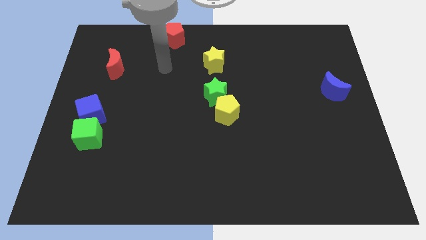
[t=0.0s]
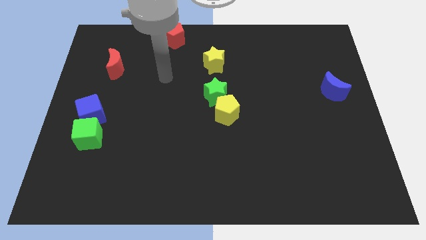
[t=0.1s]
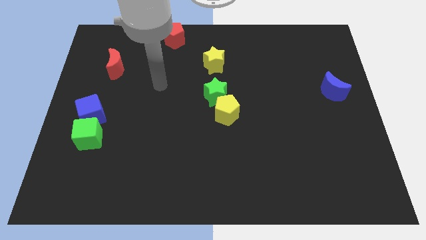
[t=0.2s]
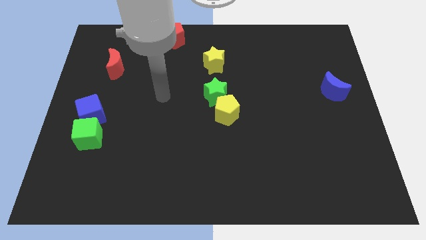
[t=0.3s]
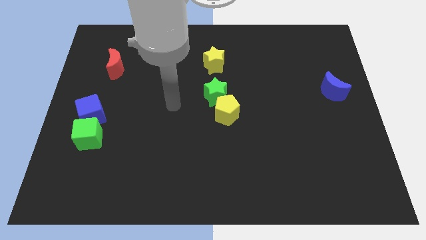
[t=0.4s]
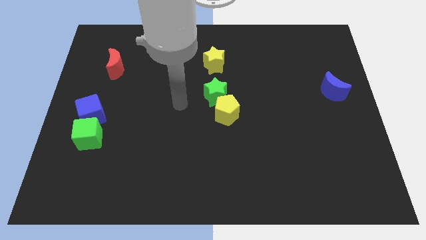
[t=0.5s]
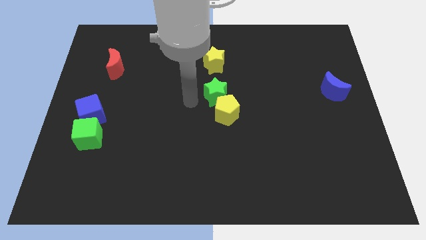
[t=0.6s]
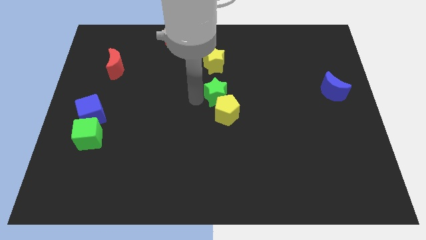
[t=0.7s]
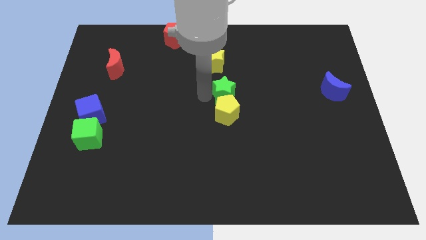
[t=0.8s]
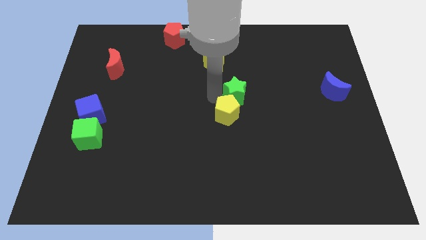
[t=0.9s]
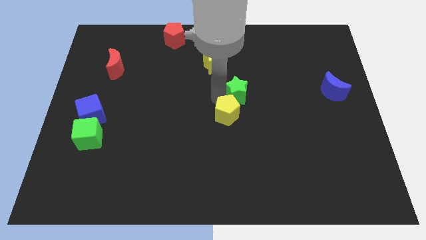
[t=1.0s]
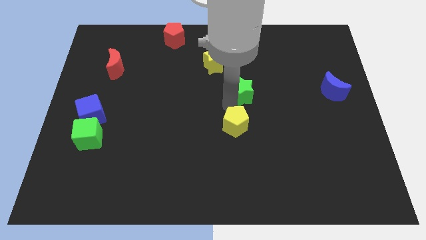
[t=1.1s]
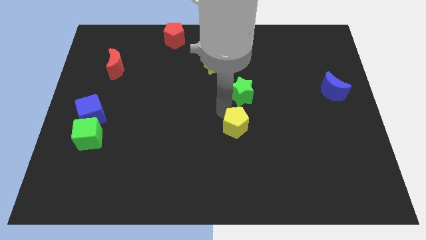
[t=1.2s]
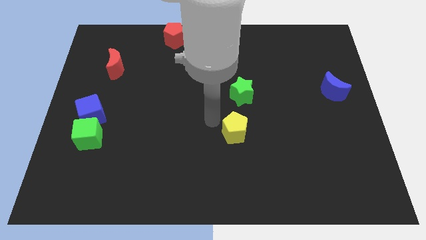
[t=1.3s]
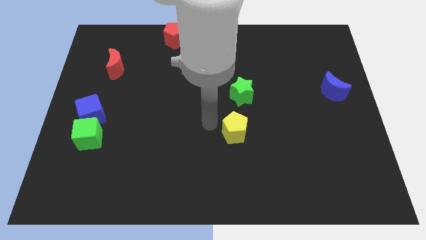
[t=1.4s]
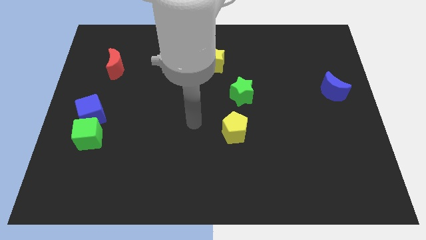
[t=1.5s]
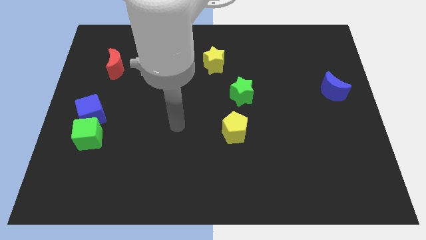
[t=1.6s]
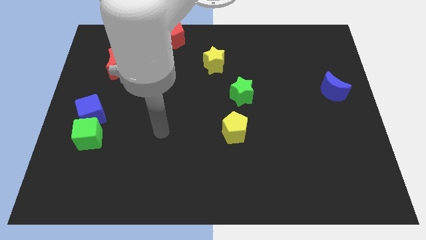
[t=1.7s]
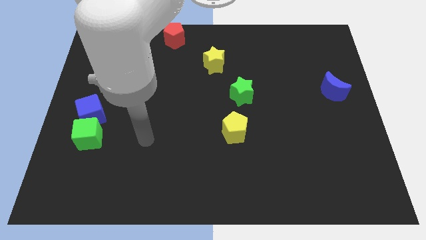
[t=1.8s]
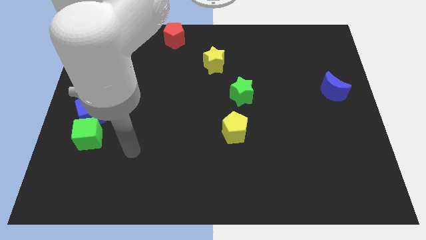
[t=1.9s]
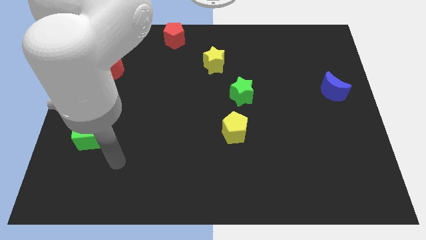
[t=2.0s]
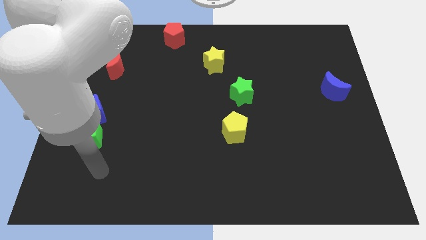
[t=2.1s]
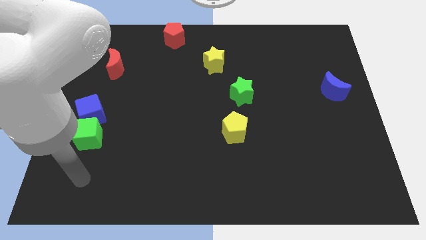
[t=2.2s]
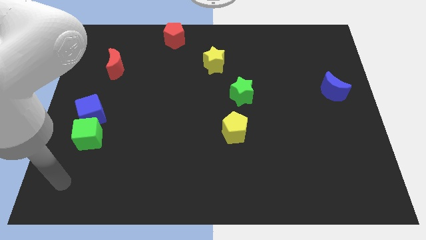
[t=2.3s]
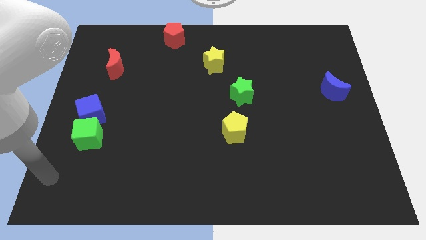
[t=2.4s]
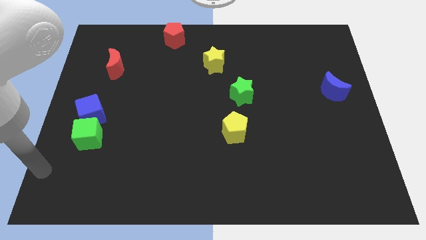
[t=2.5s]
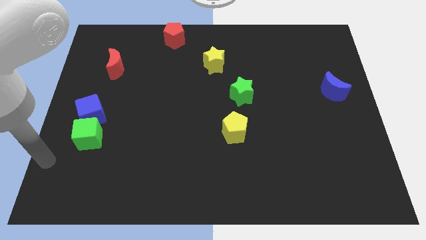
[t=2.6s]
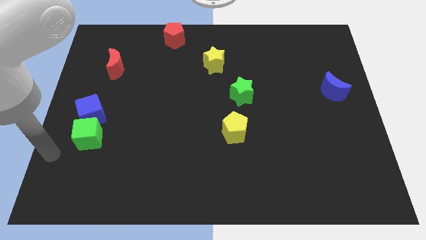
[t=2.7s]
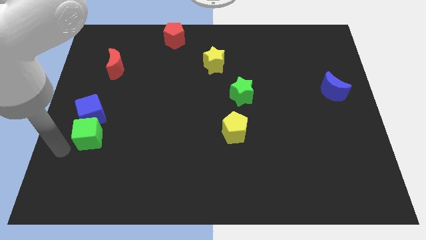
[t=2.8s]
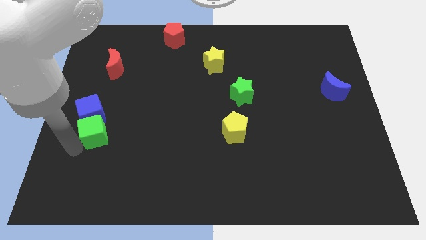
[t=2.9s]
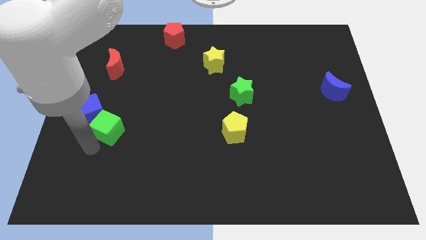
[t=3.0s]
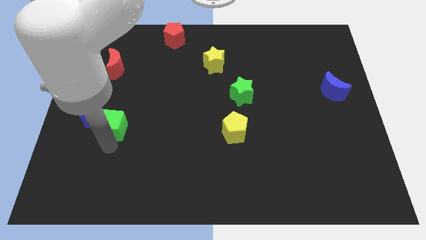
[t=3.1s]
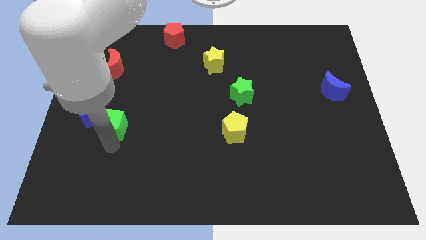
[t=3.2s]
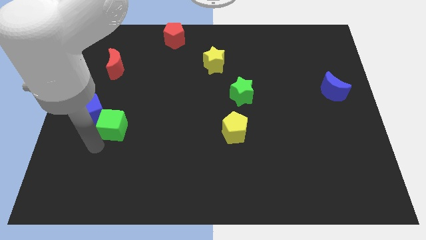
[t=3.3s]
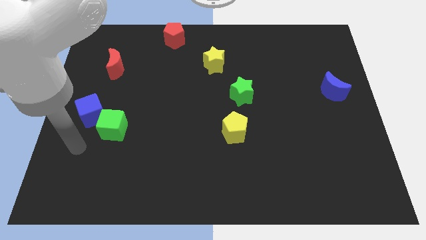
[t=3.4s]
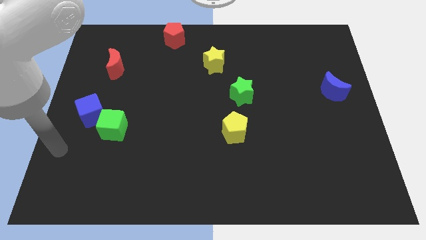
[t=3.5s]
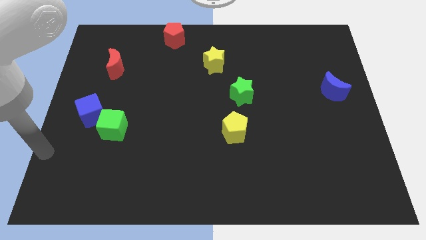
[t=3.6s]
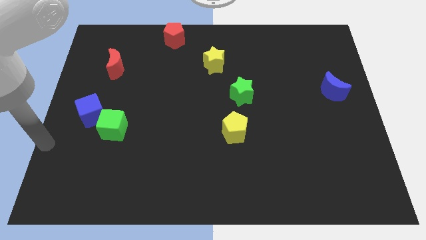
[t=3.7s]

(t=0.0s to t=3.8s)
separate green star and the yellow pentagon

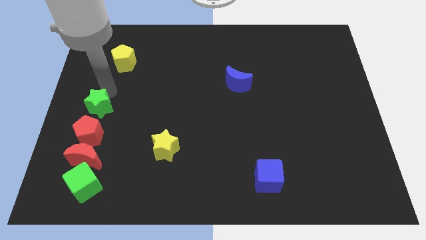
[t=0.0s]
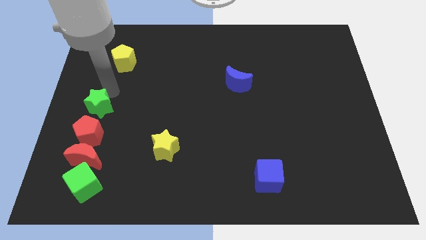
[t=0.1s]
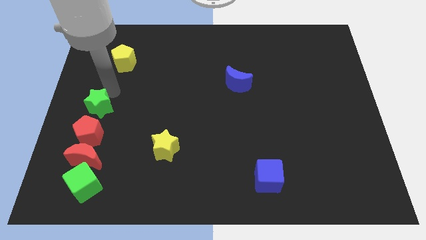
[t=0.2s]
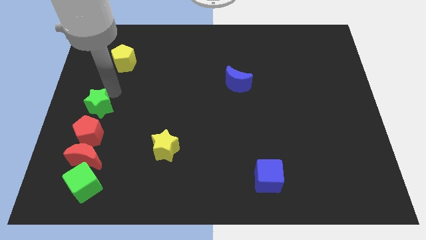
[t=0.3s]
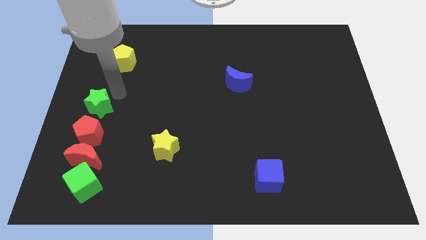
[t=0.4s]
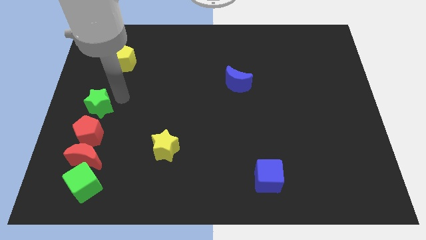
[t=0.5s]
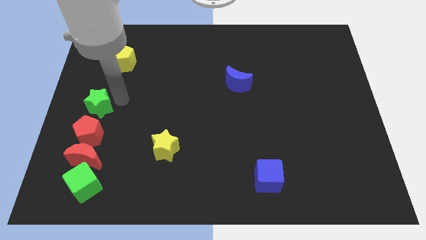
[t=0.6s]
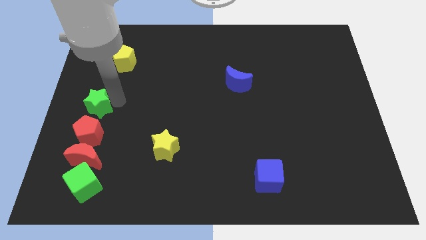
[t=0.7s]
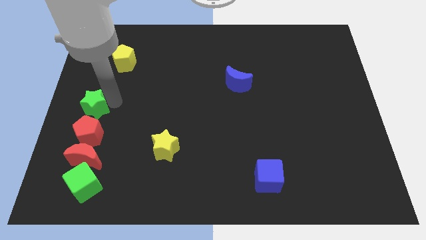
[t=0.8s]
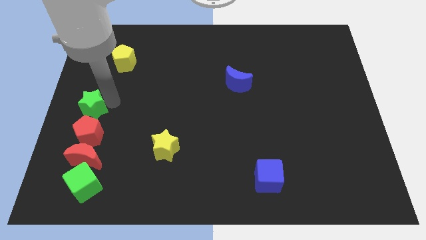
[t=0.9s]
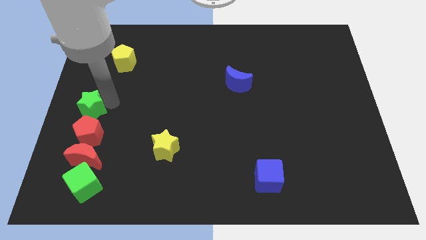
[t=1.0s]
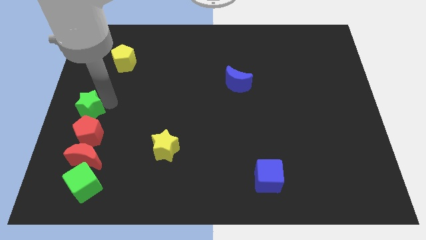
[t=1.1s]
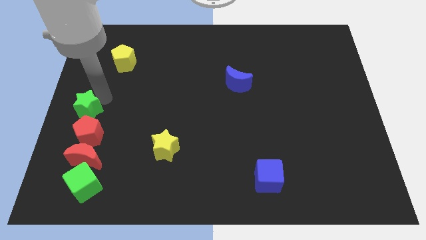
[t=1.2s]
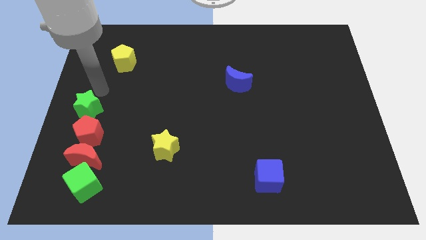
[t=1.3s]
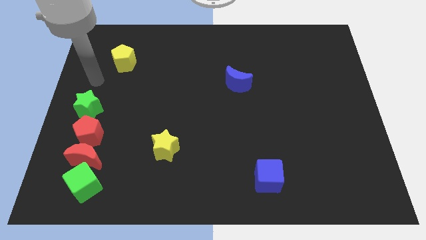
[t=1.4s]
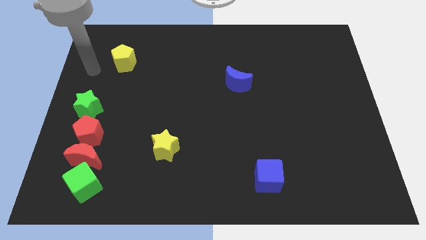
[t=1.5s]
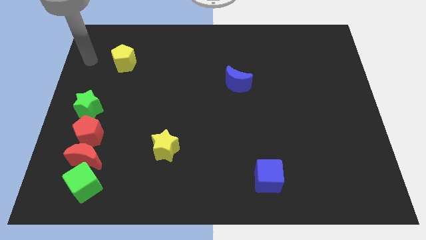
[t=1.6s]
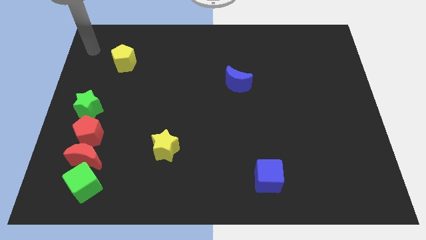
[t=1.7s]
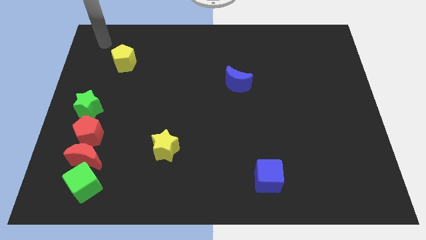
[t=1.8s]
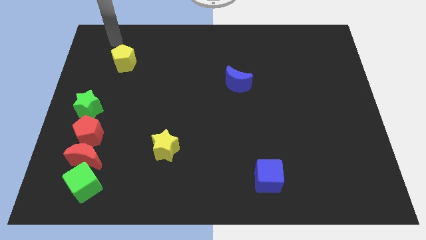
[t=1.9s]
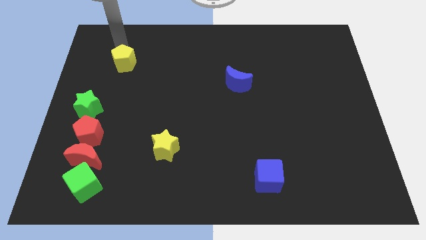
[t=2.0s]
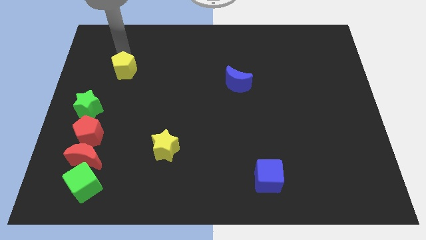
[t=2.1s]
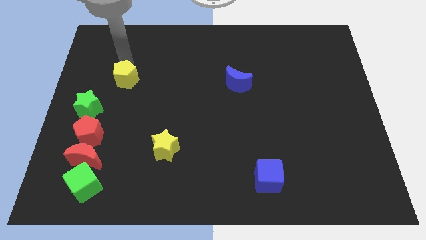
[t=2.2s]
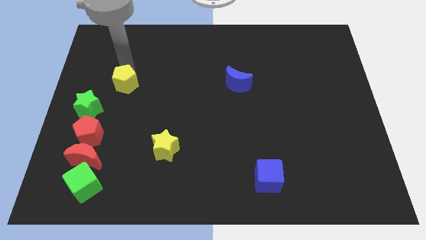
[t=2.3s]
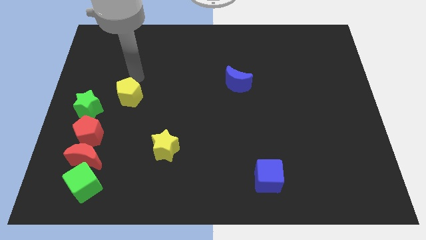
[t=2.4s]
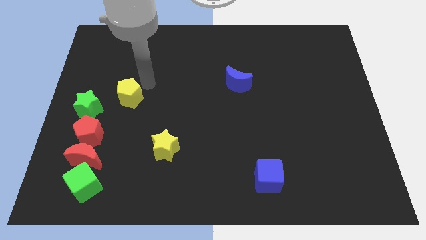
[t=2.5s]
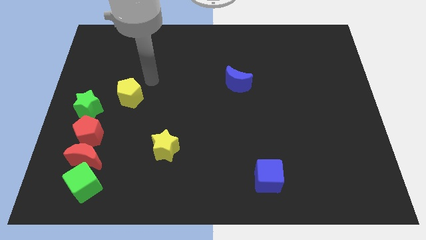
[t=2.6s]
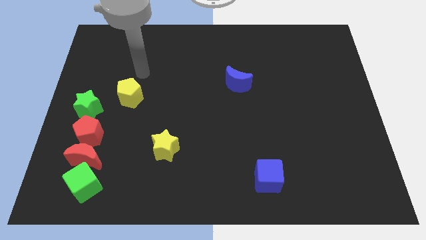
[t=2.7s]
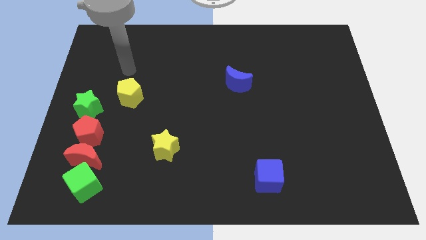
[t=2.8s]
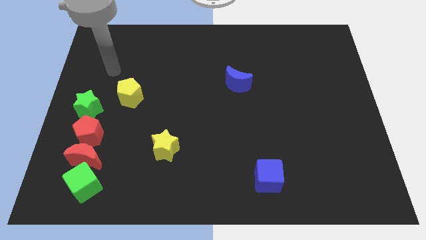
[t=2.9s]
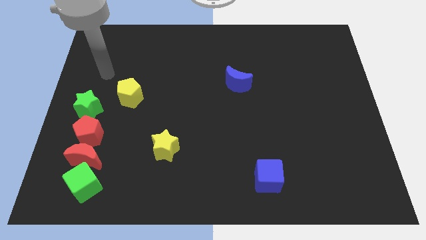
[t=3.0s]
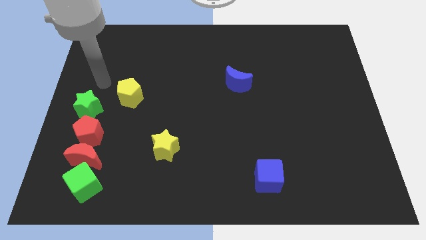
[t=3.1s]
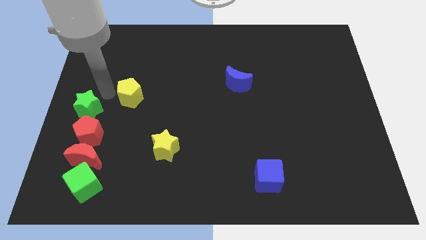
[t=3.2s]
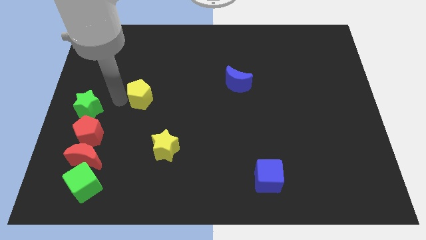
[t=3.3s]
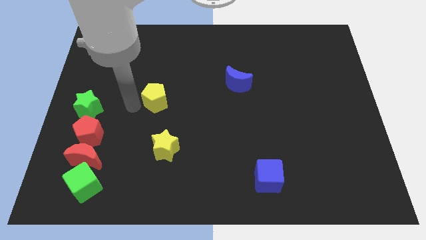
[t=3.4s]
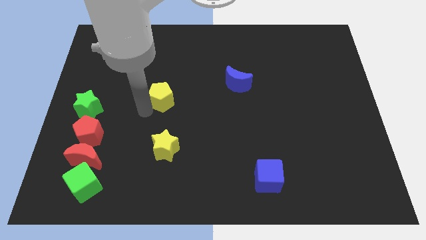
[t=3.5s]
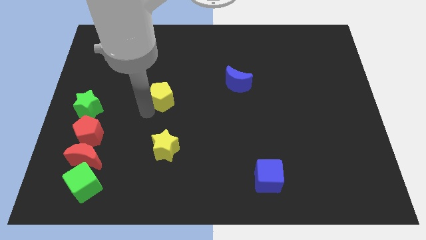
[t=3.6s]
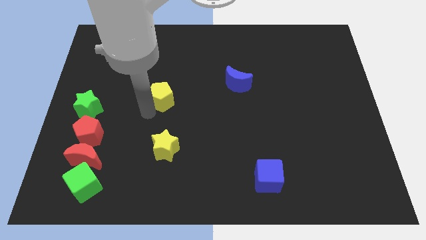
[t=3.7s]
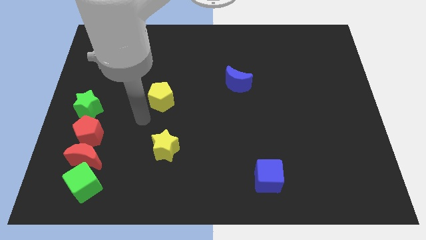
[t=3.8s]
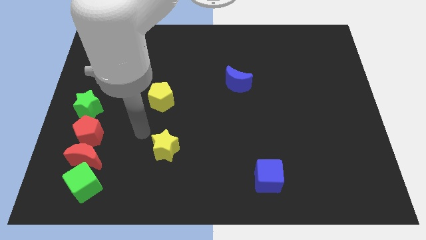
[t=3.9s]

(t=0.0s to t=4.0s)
place the yellow pentagon in between the blue moon and green star

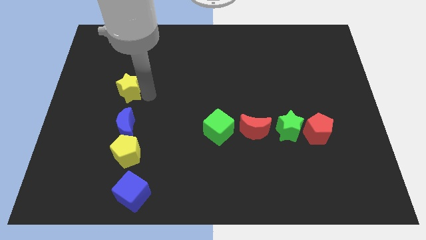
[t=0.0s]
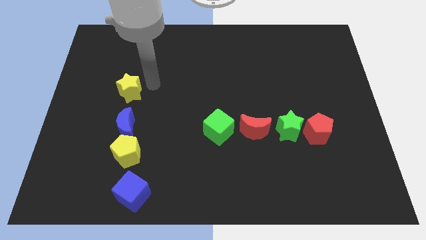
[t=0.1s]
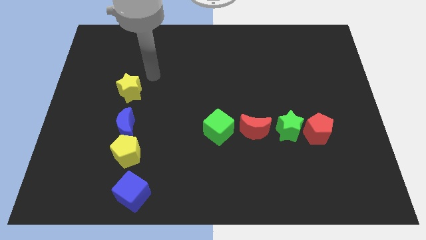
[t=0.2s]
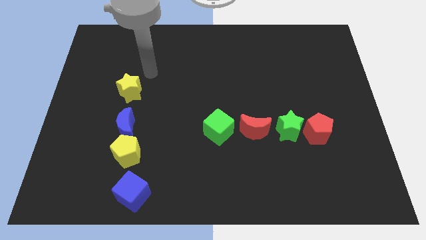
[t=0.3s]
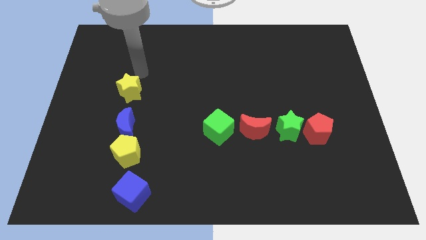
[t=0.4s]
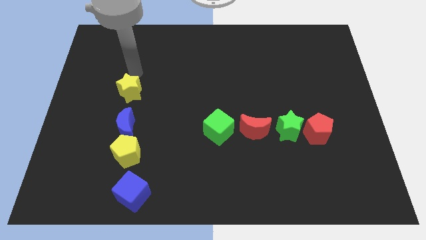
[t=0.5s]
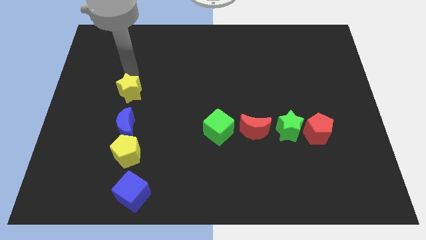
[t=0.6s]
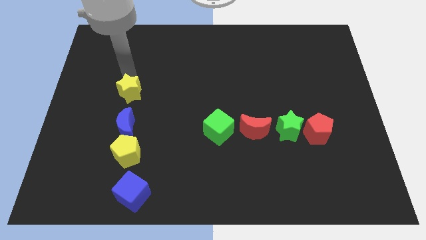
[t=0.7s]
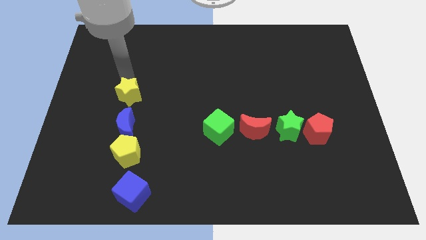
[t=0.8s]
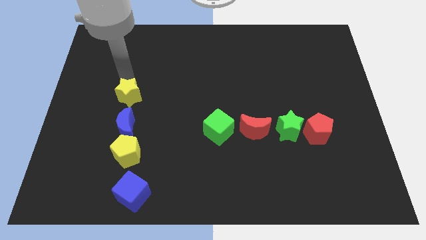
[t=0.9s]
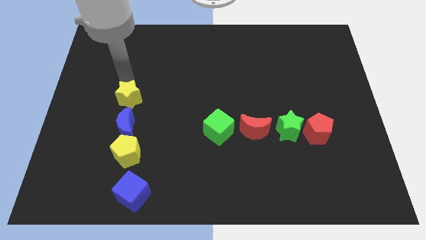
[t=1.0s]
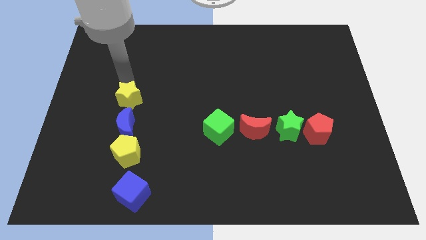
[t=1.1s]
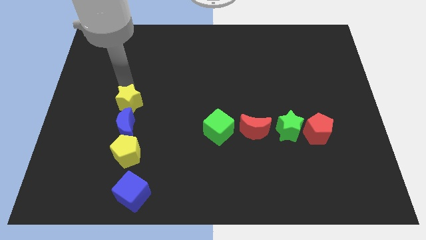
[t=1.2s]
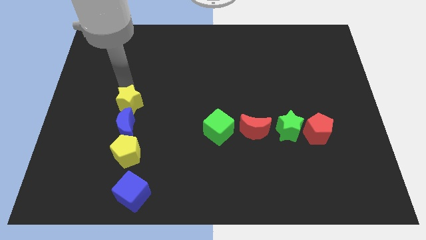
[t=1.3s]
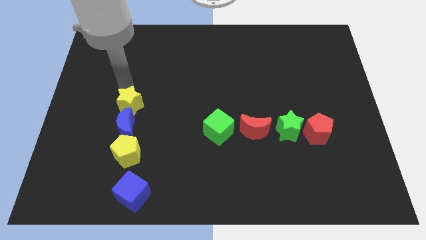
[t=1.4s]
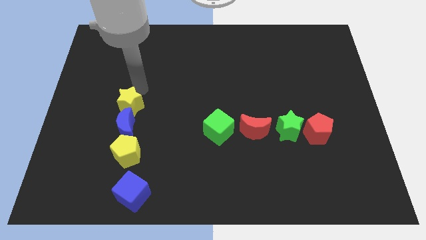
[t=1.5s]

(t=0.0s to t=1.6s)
put the yellow star close to the blue crescent
